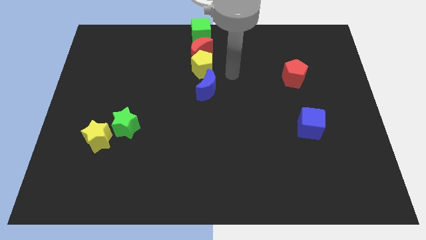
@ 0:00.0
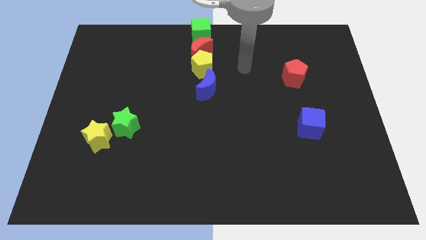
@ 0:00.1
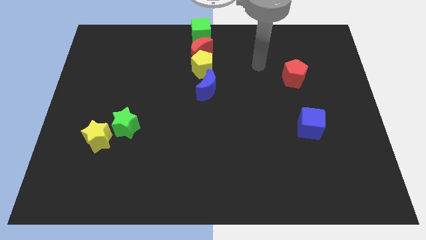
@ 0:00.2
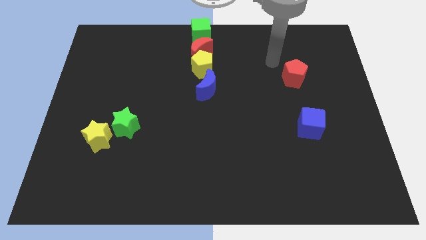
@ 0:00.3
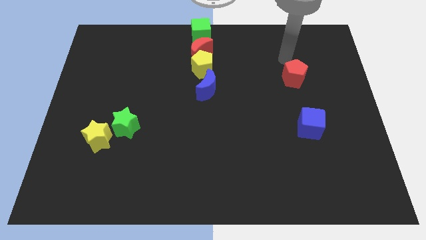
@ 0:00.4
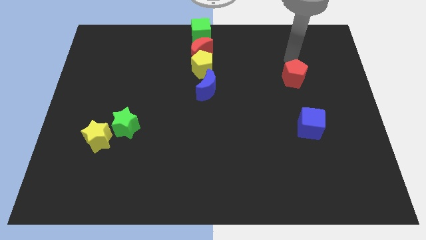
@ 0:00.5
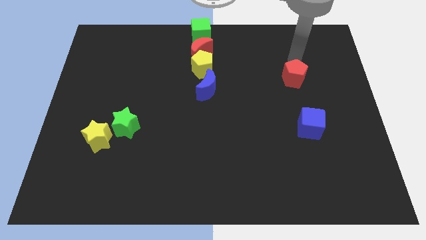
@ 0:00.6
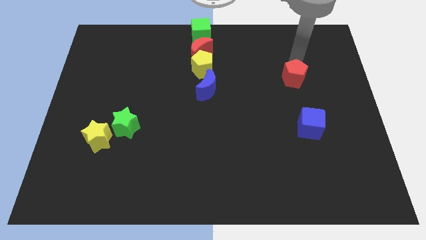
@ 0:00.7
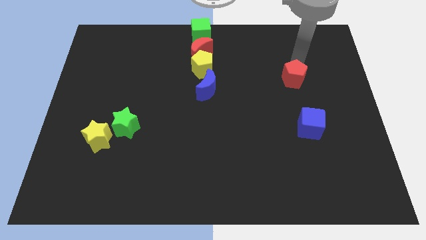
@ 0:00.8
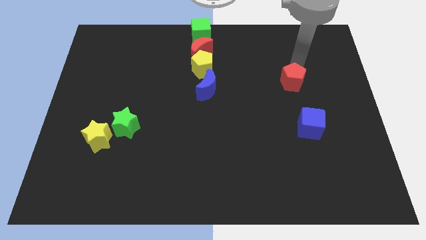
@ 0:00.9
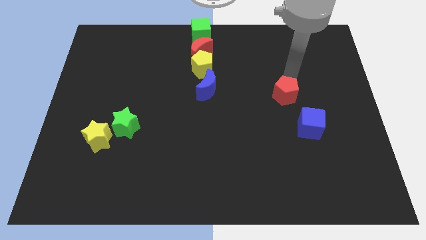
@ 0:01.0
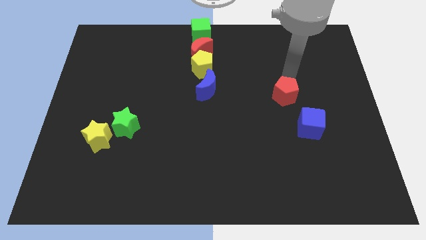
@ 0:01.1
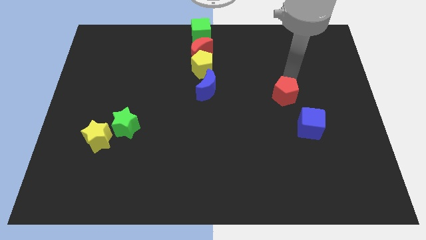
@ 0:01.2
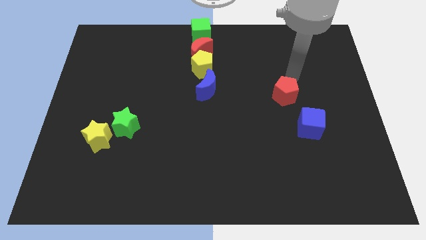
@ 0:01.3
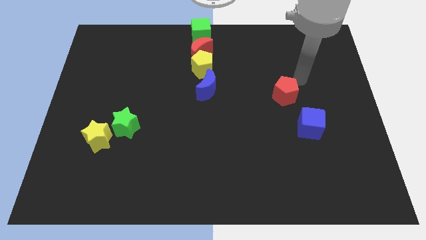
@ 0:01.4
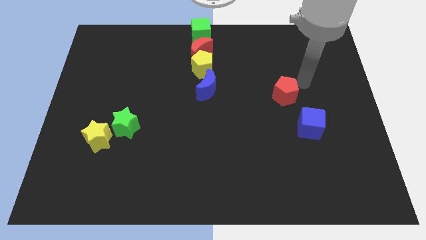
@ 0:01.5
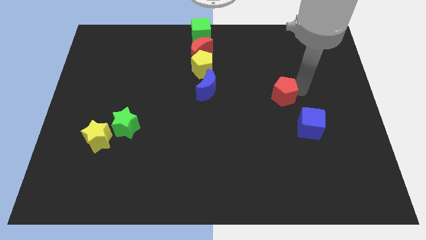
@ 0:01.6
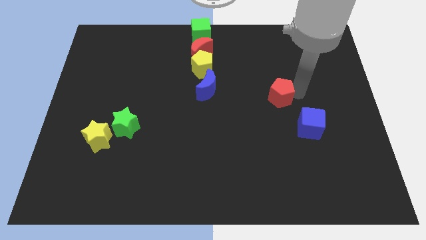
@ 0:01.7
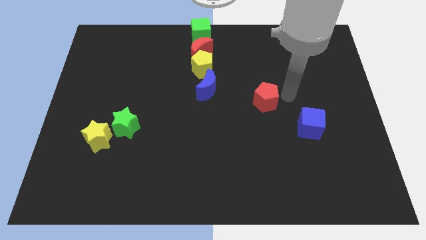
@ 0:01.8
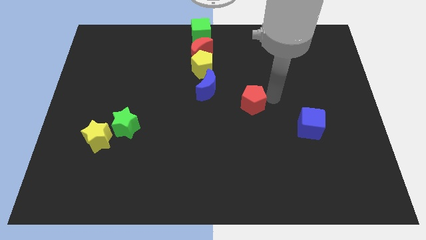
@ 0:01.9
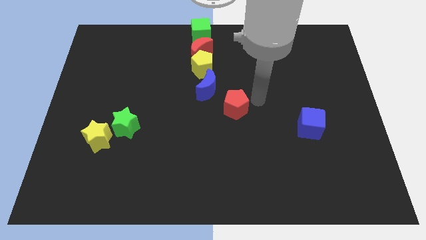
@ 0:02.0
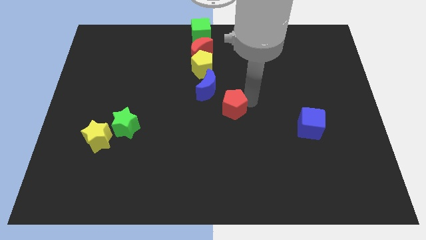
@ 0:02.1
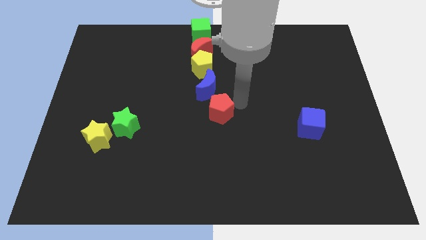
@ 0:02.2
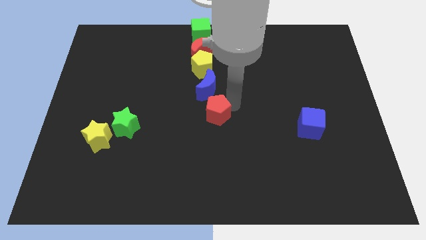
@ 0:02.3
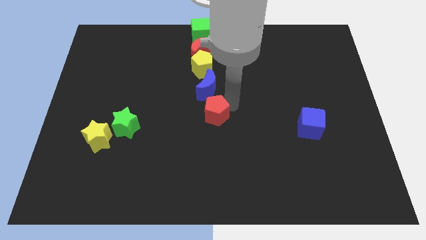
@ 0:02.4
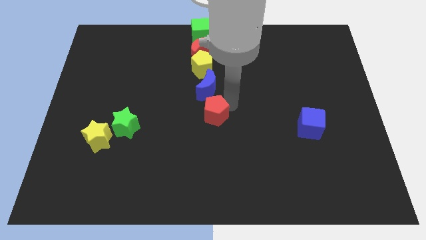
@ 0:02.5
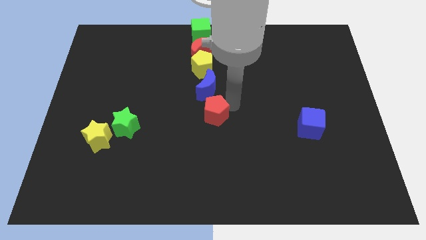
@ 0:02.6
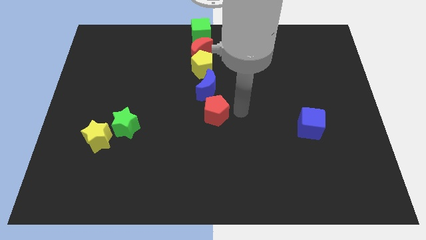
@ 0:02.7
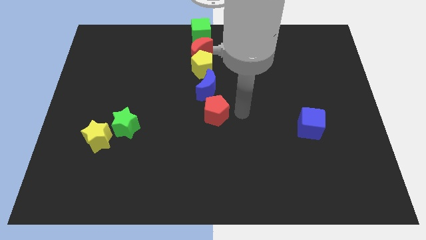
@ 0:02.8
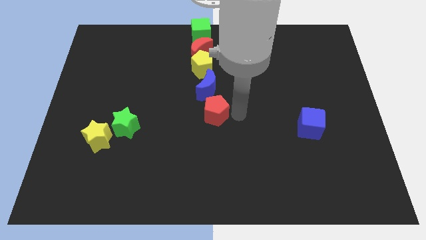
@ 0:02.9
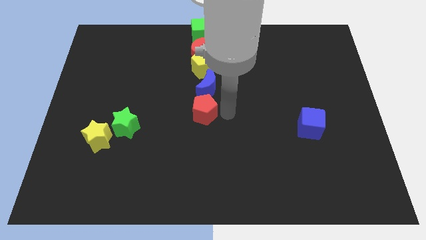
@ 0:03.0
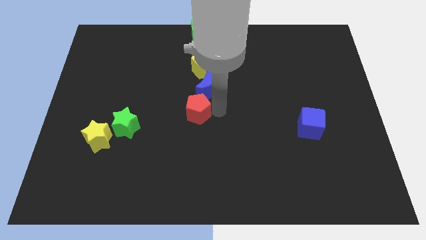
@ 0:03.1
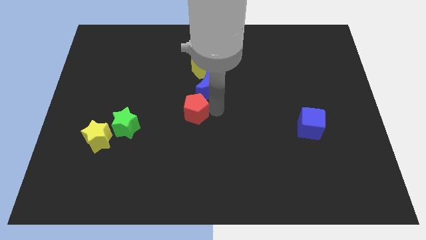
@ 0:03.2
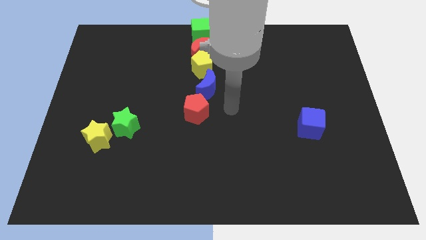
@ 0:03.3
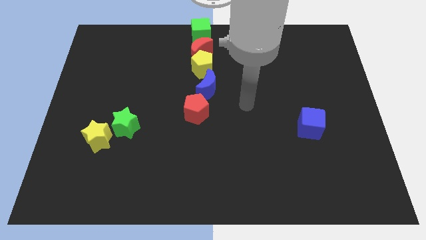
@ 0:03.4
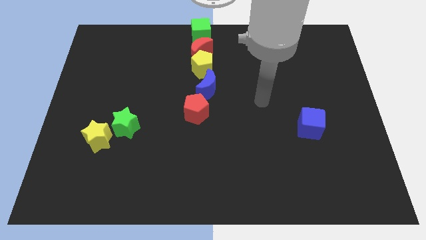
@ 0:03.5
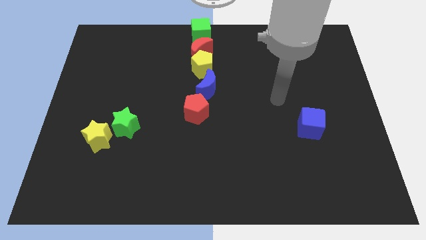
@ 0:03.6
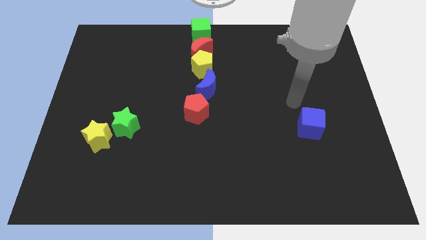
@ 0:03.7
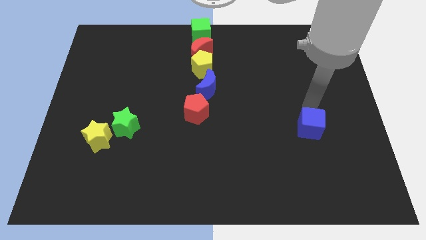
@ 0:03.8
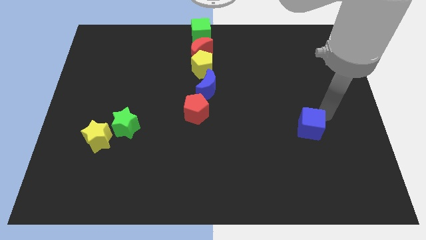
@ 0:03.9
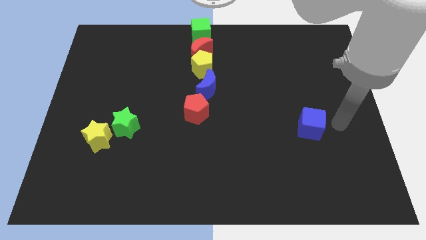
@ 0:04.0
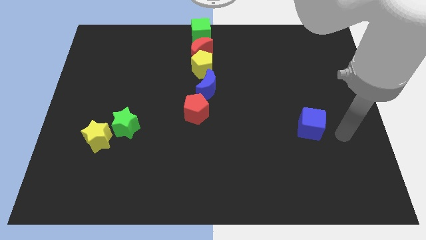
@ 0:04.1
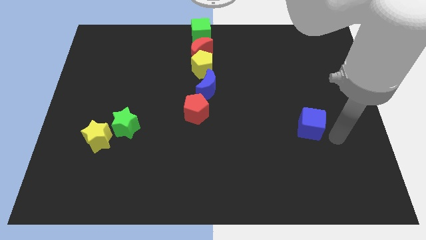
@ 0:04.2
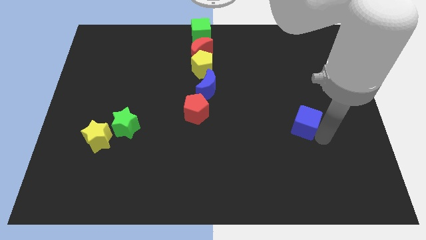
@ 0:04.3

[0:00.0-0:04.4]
move the red pentagon in a vertical line below the blue crescent

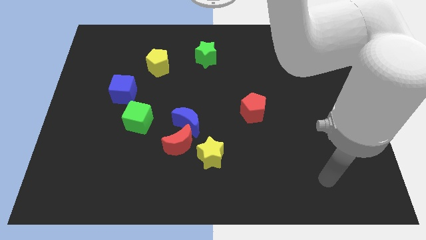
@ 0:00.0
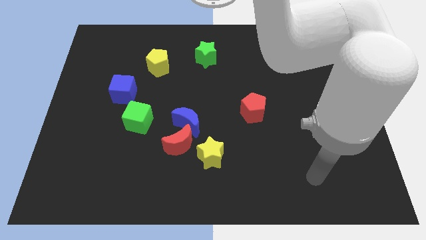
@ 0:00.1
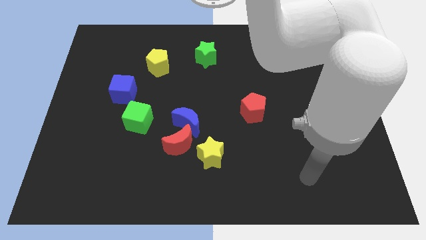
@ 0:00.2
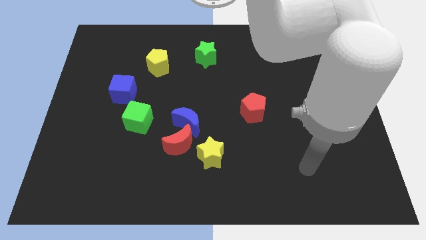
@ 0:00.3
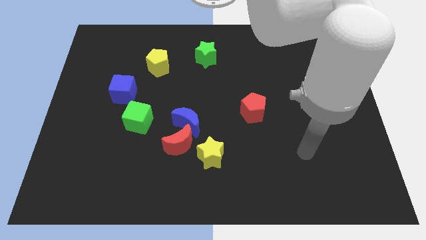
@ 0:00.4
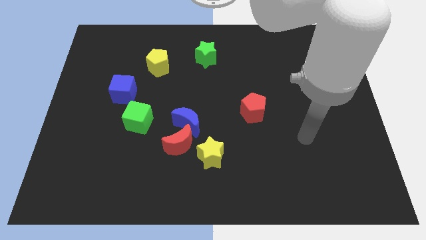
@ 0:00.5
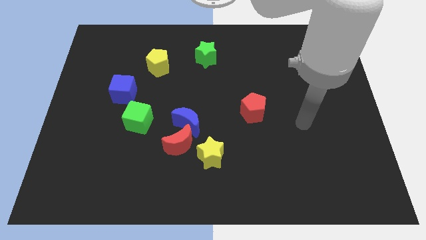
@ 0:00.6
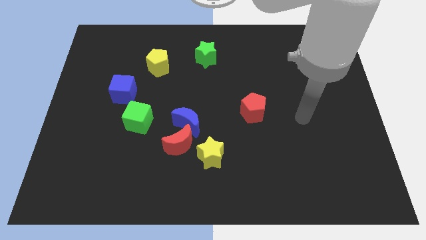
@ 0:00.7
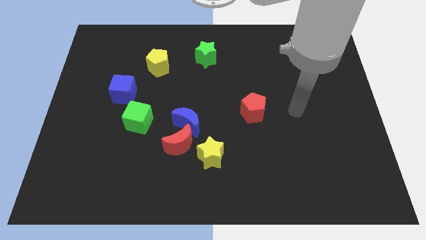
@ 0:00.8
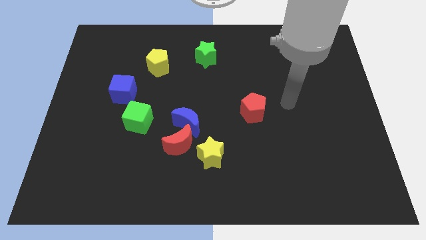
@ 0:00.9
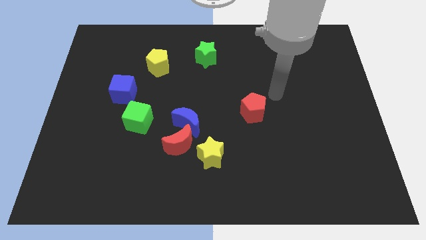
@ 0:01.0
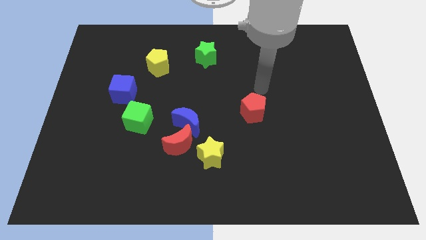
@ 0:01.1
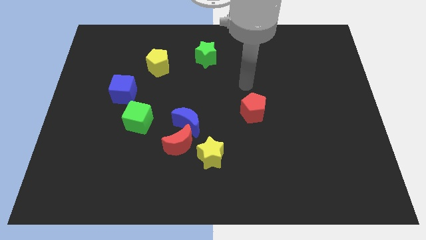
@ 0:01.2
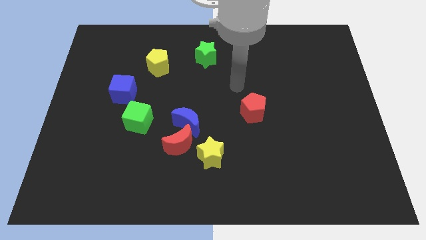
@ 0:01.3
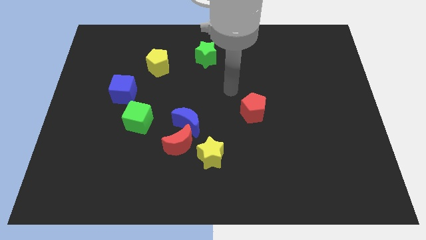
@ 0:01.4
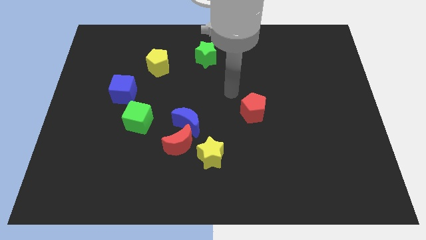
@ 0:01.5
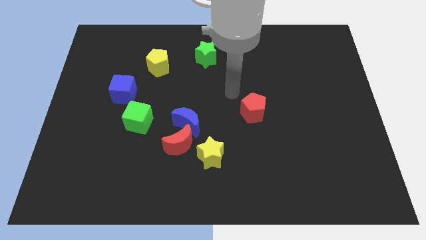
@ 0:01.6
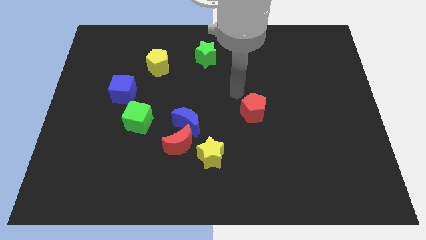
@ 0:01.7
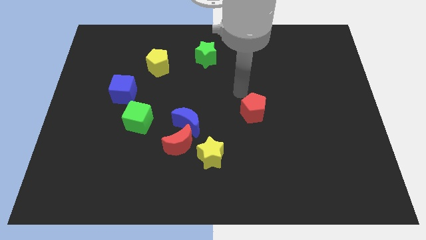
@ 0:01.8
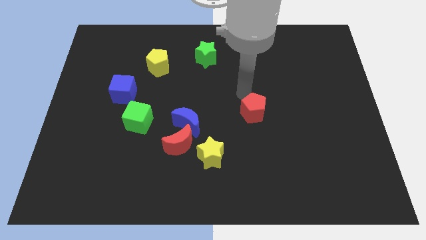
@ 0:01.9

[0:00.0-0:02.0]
move your arm to the top of the red pentagon

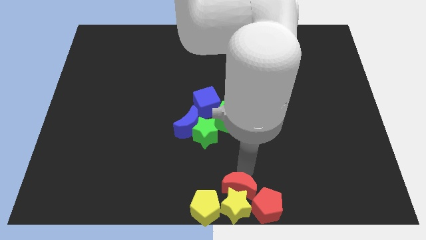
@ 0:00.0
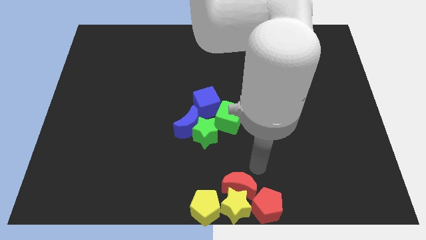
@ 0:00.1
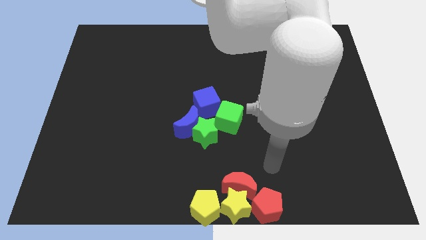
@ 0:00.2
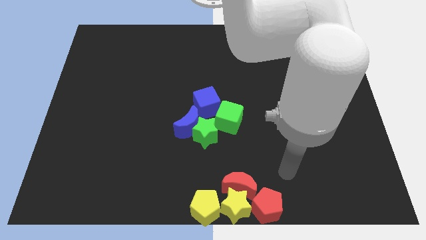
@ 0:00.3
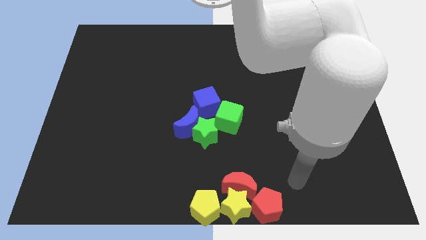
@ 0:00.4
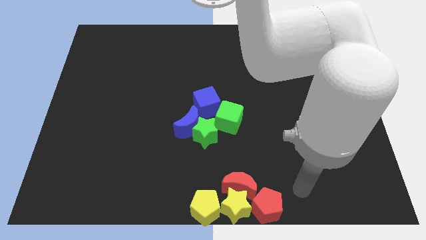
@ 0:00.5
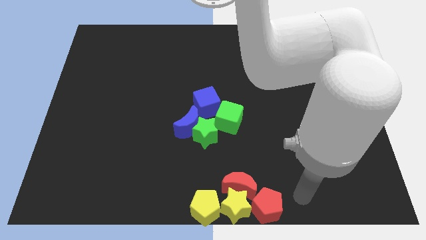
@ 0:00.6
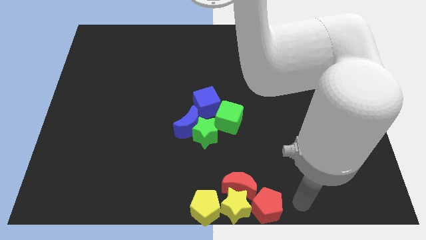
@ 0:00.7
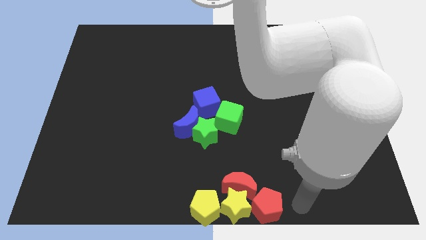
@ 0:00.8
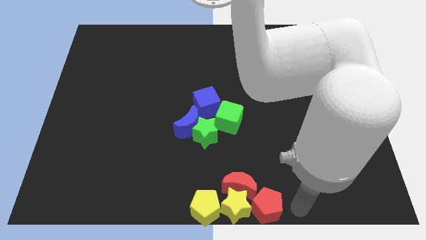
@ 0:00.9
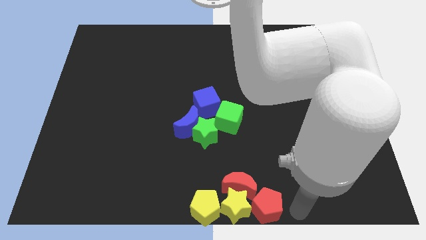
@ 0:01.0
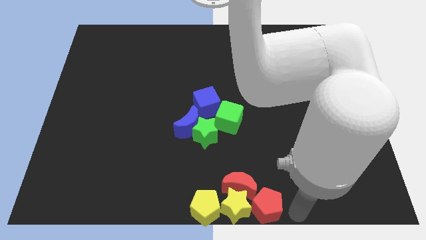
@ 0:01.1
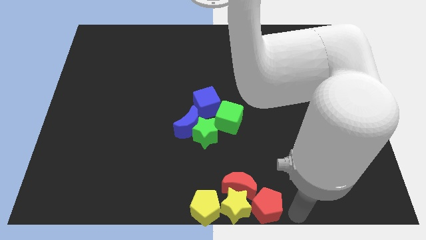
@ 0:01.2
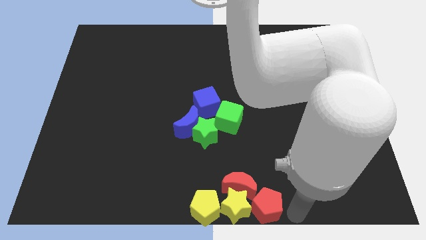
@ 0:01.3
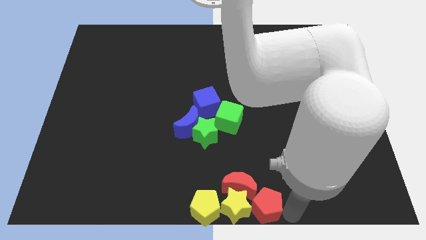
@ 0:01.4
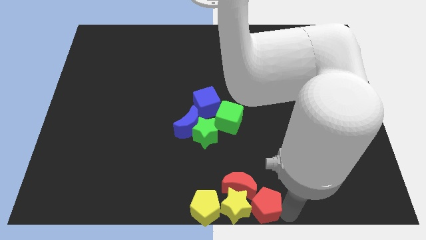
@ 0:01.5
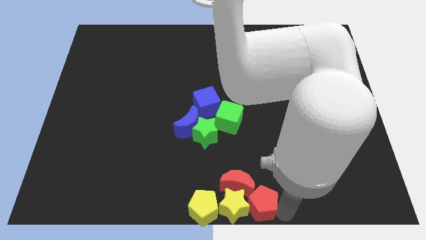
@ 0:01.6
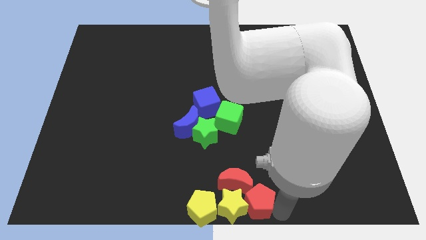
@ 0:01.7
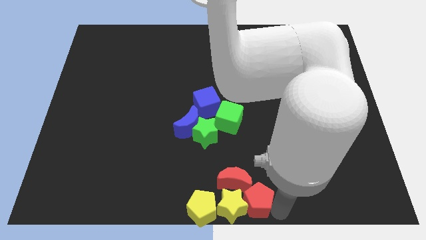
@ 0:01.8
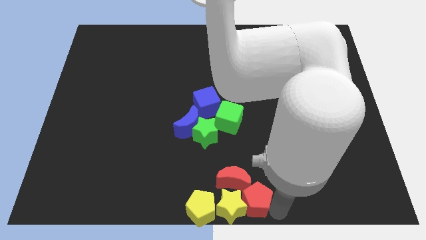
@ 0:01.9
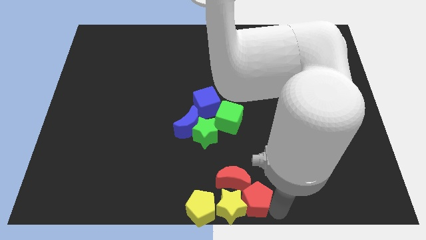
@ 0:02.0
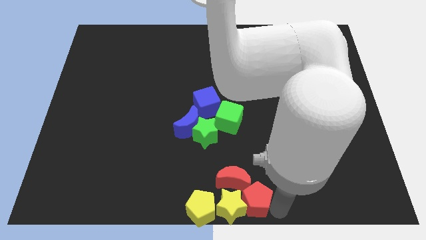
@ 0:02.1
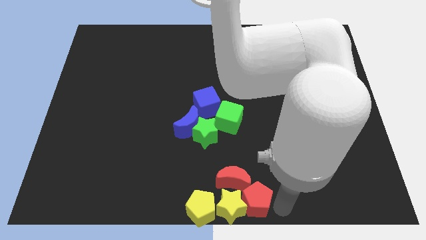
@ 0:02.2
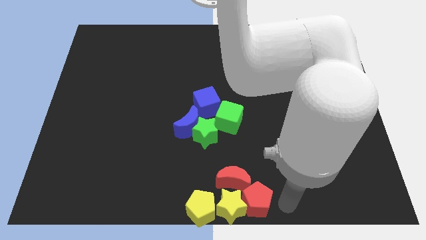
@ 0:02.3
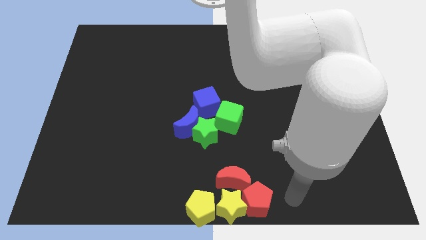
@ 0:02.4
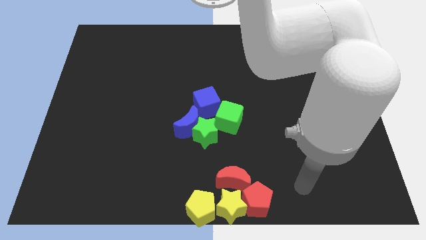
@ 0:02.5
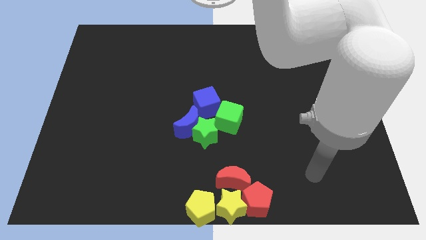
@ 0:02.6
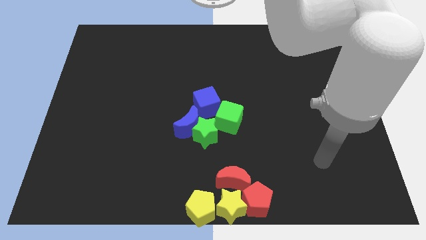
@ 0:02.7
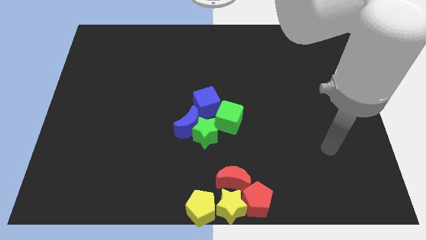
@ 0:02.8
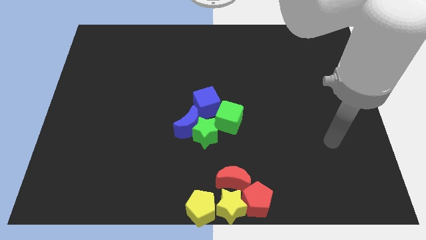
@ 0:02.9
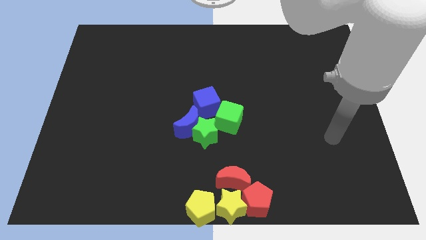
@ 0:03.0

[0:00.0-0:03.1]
move your arm away from the red moon
